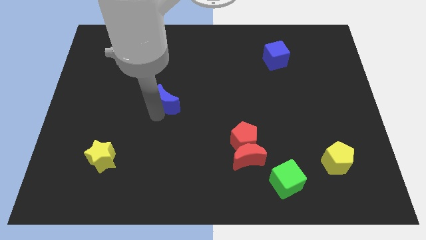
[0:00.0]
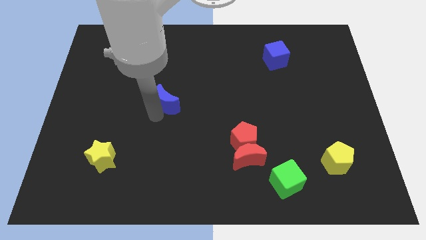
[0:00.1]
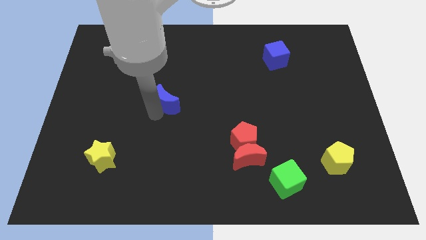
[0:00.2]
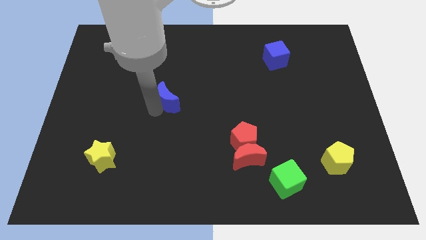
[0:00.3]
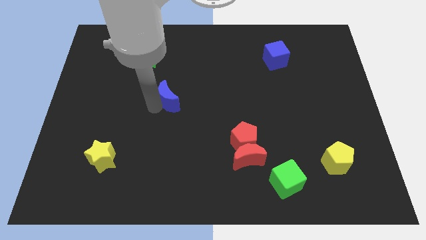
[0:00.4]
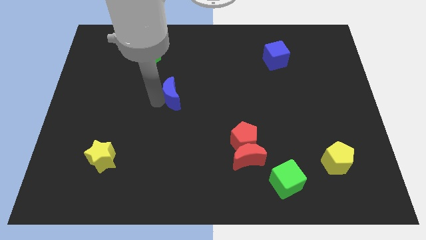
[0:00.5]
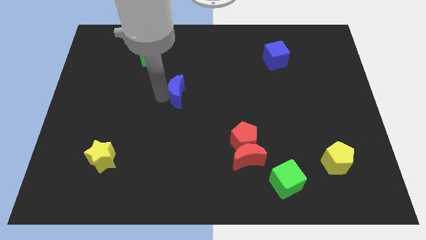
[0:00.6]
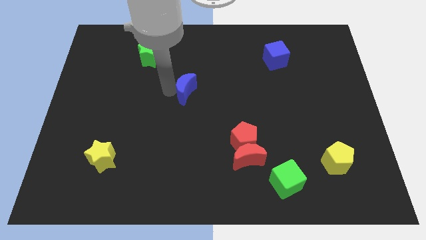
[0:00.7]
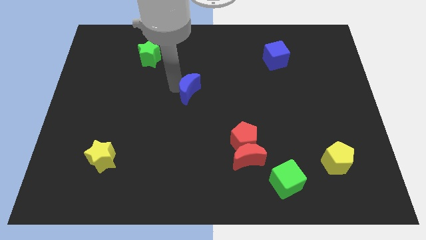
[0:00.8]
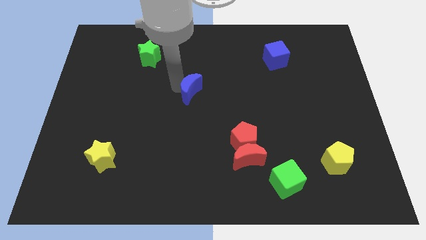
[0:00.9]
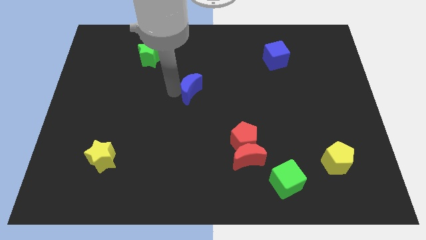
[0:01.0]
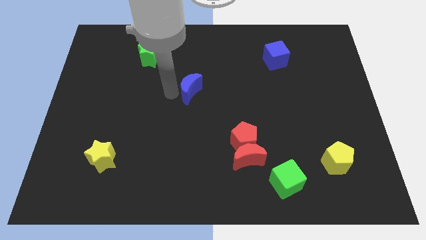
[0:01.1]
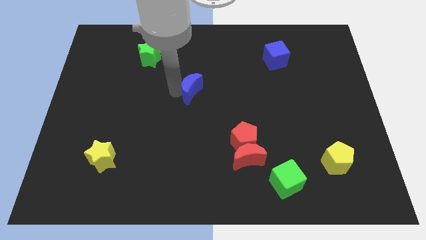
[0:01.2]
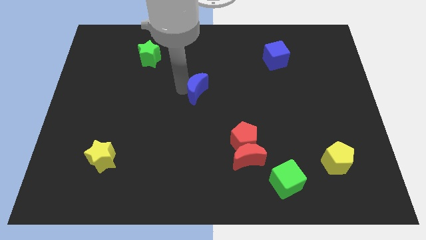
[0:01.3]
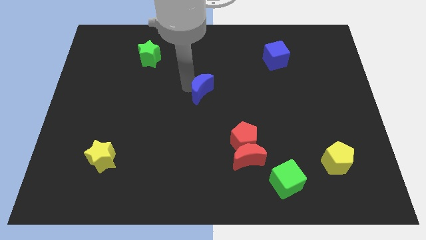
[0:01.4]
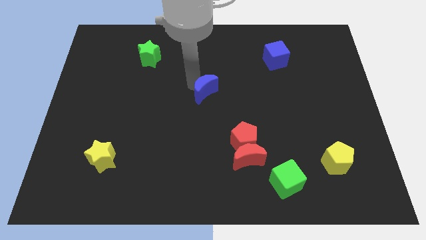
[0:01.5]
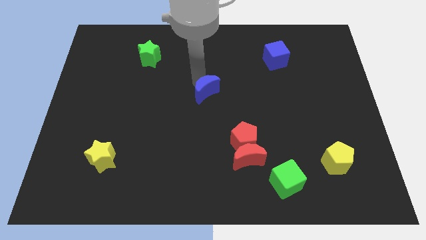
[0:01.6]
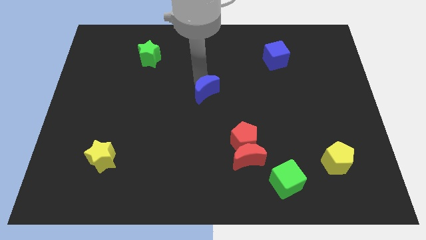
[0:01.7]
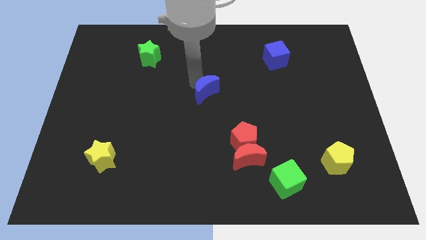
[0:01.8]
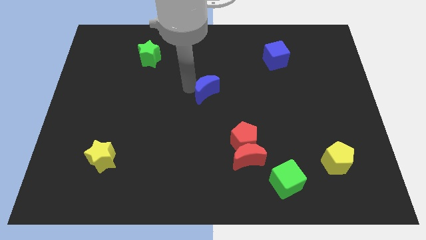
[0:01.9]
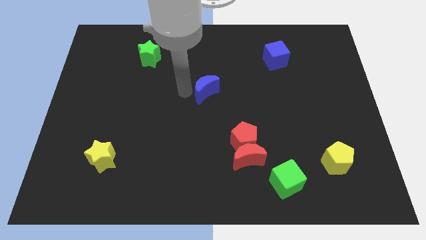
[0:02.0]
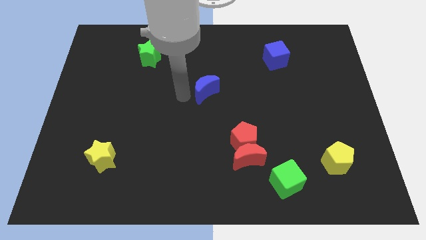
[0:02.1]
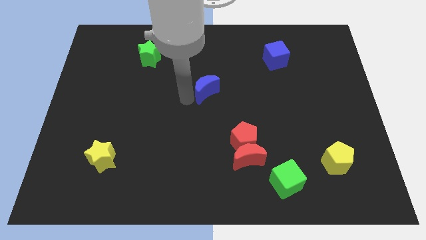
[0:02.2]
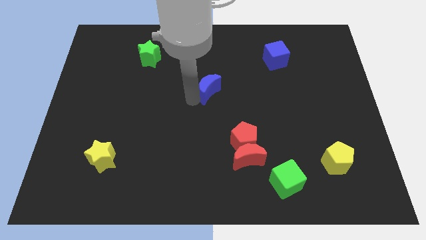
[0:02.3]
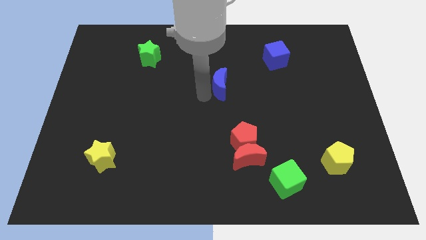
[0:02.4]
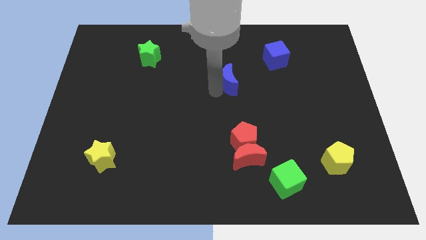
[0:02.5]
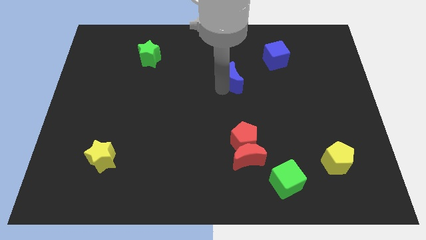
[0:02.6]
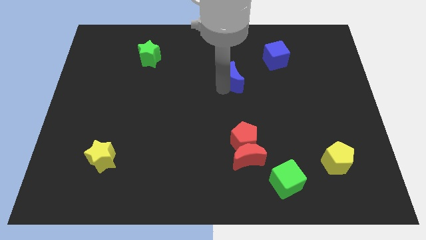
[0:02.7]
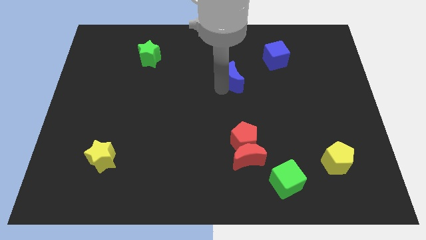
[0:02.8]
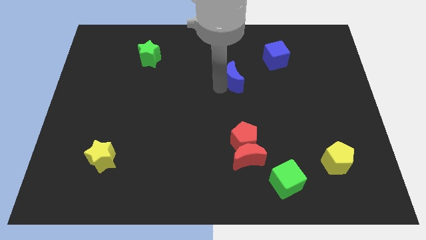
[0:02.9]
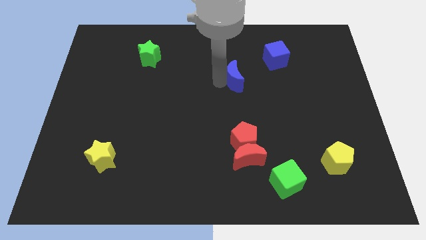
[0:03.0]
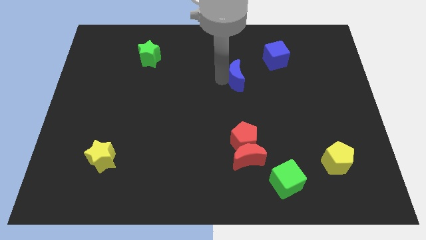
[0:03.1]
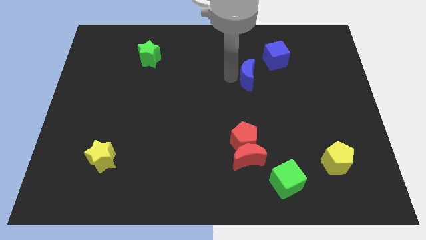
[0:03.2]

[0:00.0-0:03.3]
adjust the blue moon on the top of the red pentagon vertically

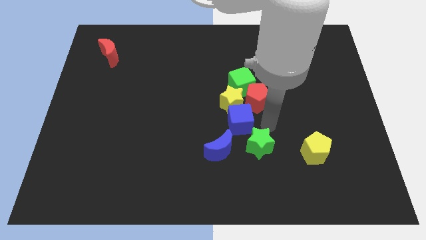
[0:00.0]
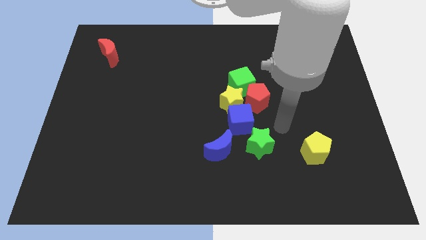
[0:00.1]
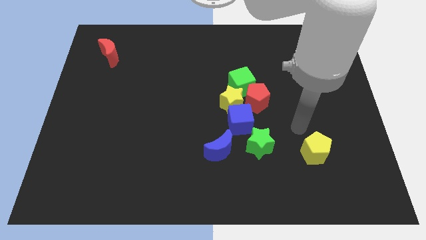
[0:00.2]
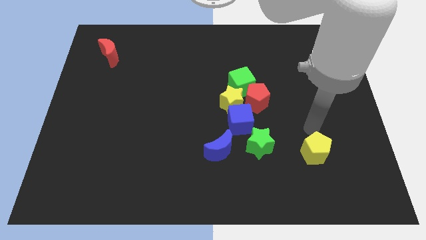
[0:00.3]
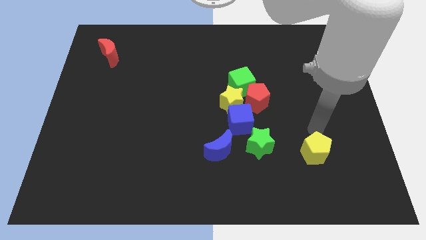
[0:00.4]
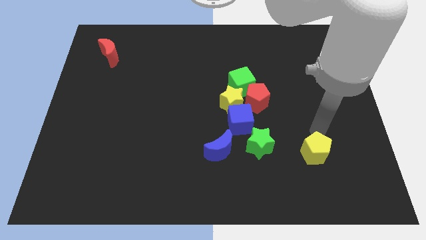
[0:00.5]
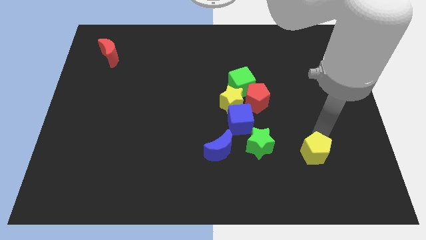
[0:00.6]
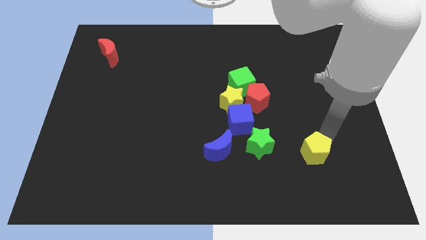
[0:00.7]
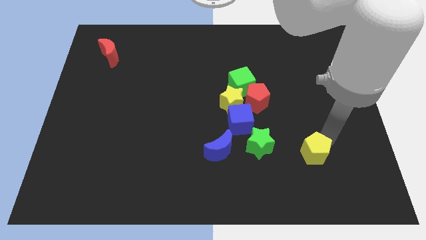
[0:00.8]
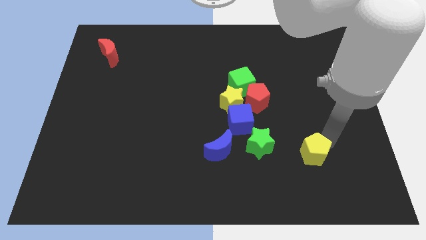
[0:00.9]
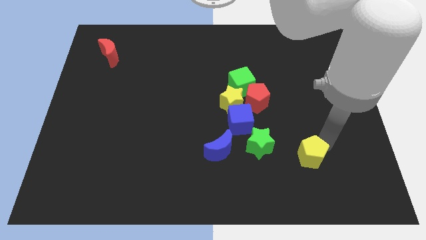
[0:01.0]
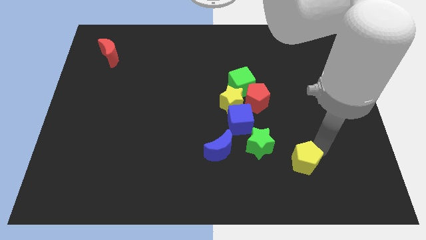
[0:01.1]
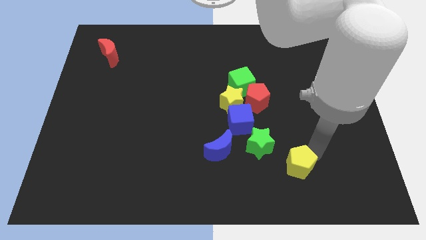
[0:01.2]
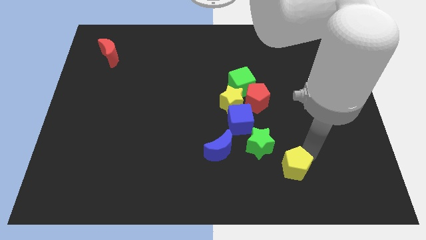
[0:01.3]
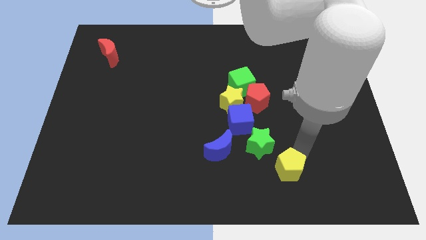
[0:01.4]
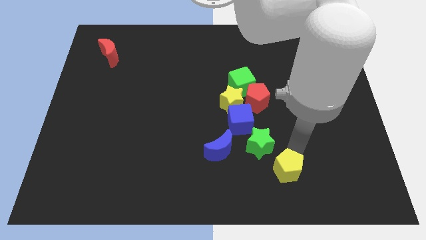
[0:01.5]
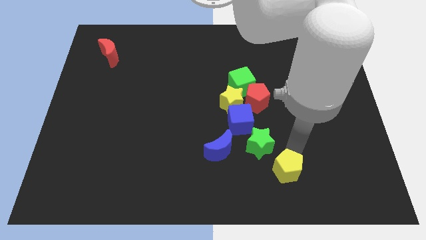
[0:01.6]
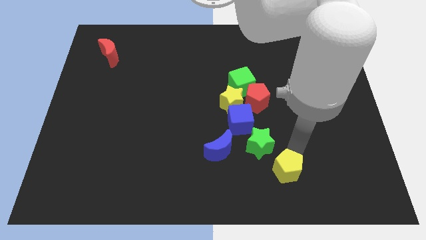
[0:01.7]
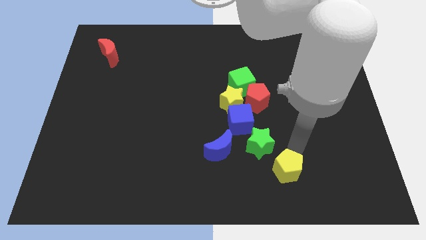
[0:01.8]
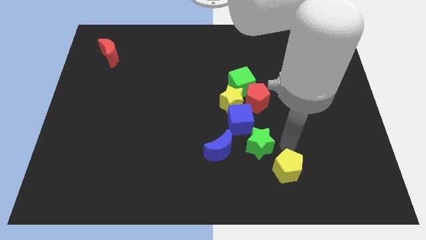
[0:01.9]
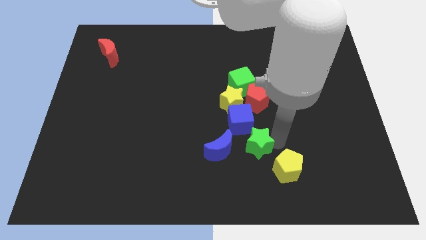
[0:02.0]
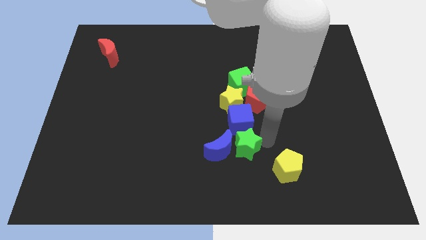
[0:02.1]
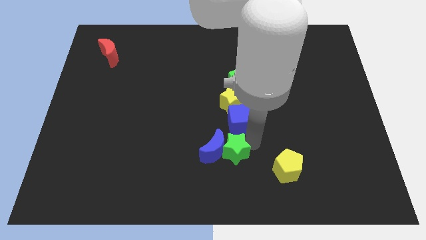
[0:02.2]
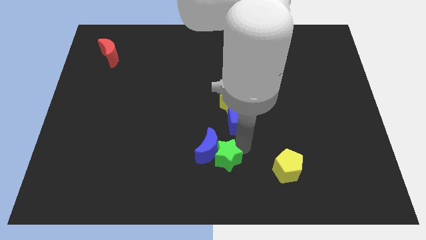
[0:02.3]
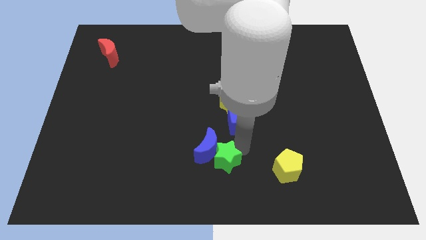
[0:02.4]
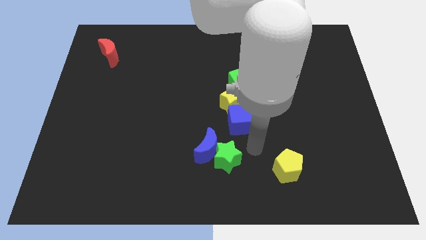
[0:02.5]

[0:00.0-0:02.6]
push the green star into the blue crescent

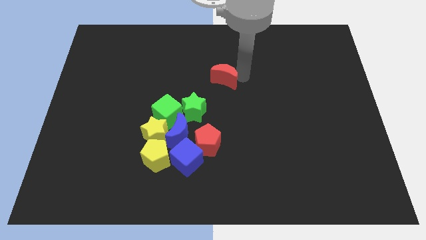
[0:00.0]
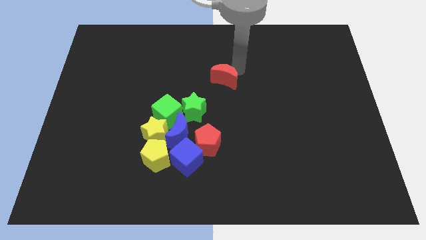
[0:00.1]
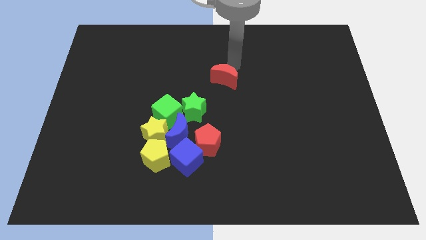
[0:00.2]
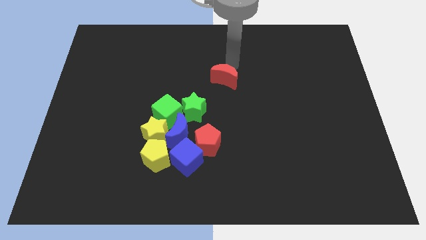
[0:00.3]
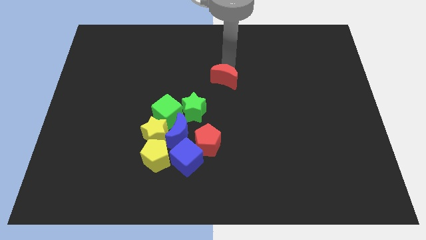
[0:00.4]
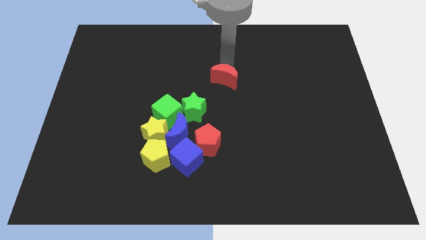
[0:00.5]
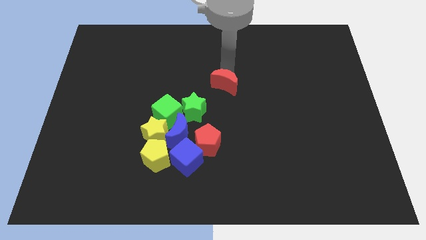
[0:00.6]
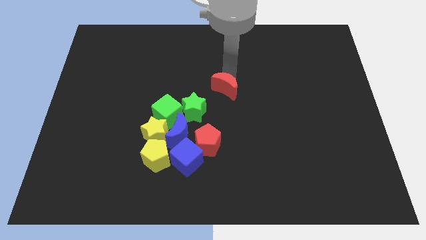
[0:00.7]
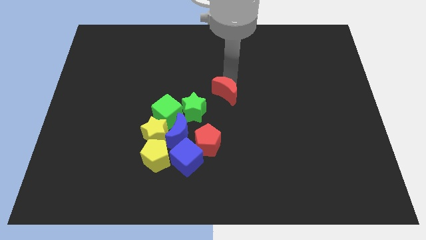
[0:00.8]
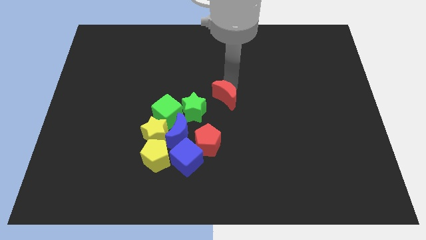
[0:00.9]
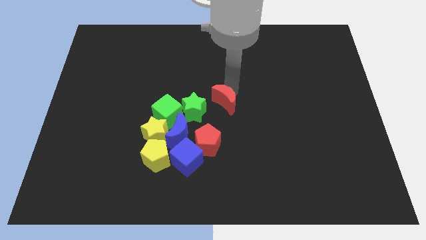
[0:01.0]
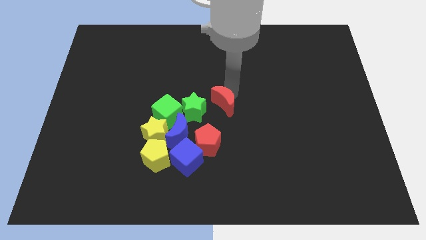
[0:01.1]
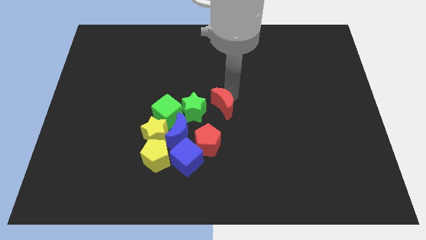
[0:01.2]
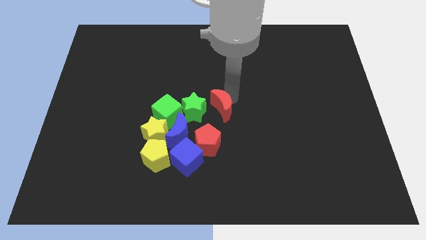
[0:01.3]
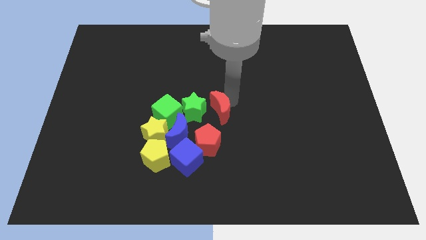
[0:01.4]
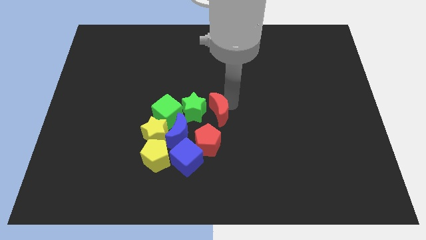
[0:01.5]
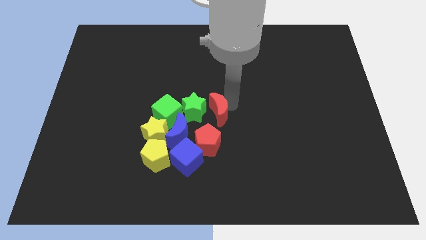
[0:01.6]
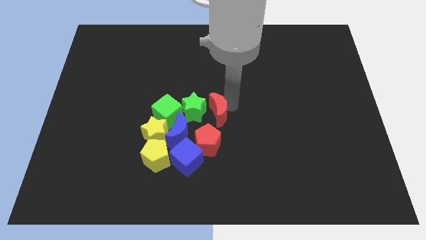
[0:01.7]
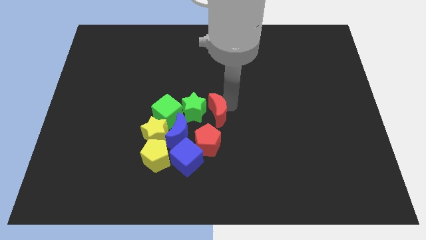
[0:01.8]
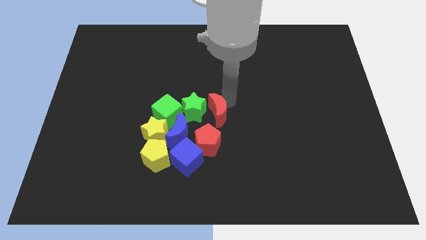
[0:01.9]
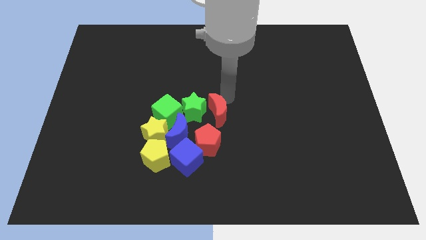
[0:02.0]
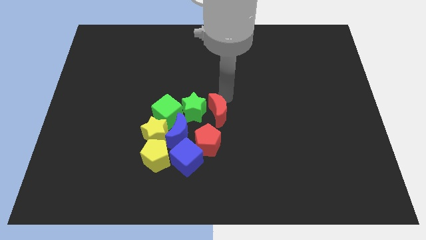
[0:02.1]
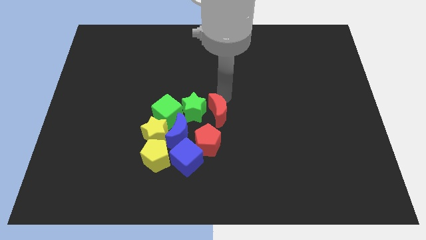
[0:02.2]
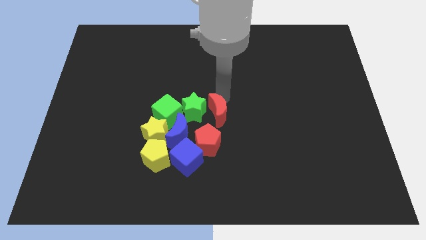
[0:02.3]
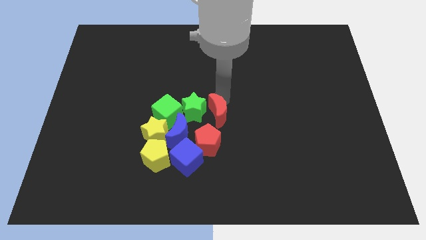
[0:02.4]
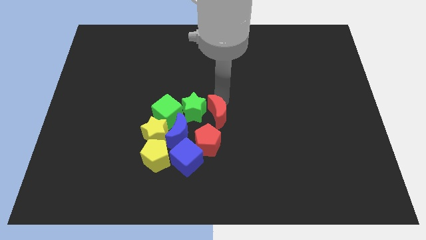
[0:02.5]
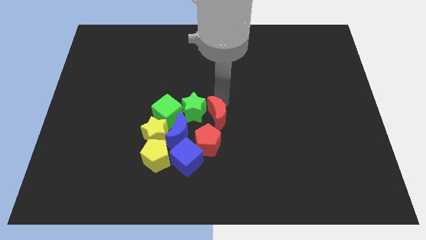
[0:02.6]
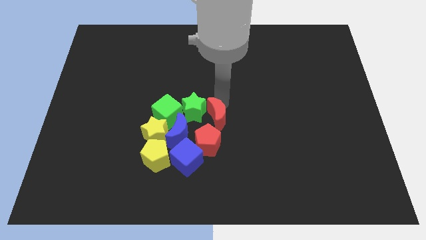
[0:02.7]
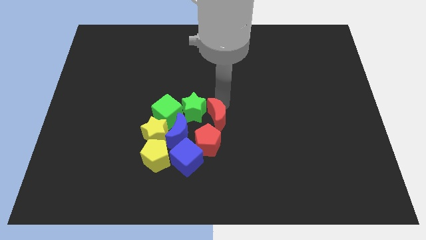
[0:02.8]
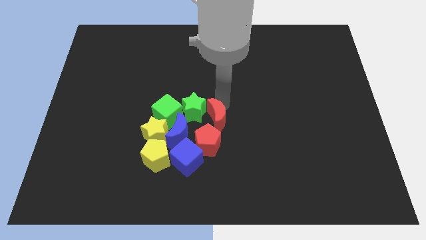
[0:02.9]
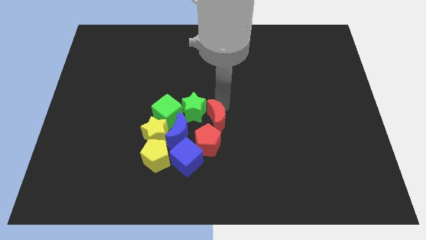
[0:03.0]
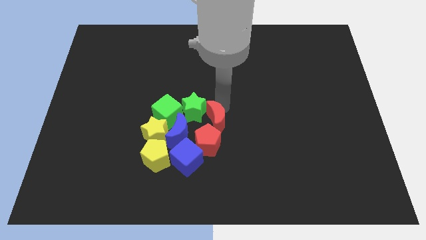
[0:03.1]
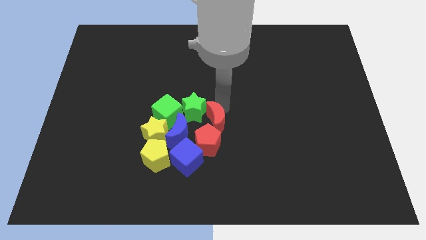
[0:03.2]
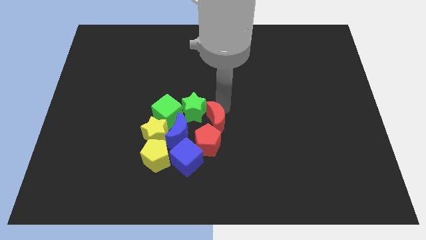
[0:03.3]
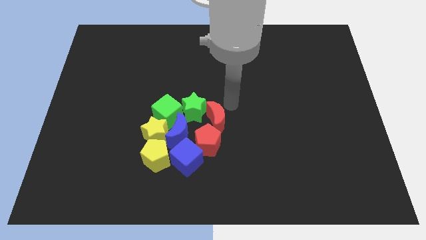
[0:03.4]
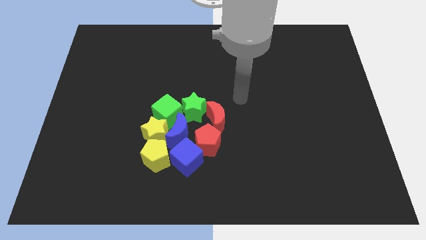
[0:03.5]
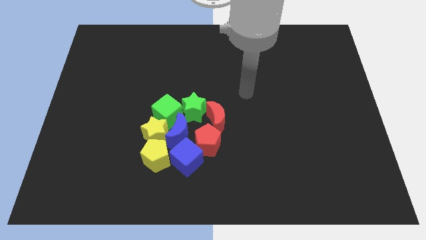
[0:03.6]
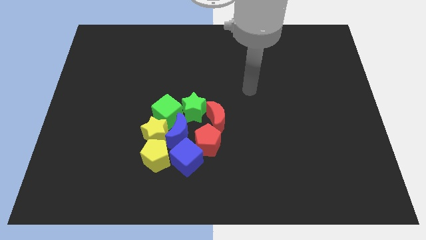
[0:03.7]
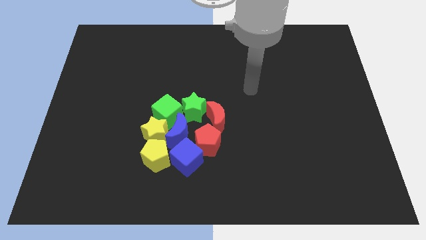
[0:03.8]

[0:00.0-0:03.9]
place the red crescent into the group of blocks
